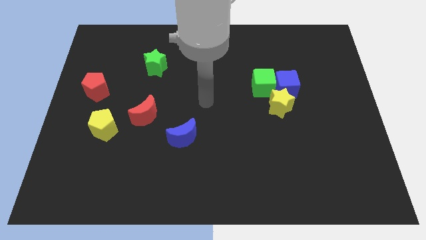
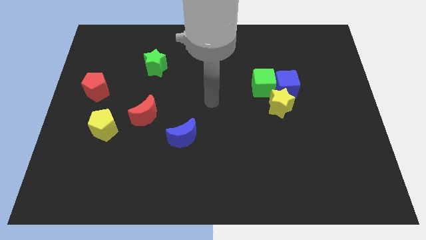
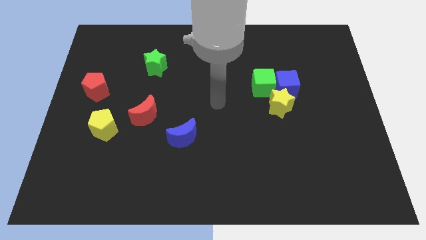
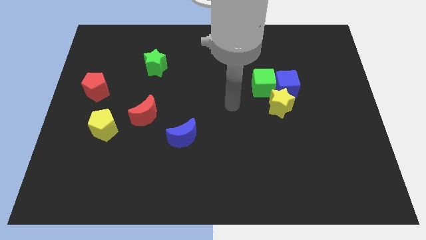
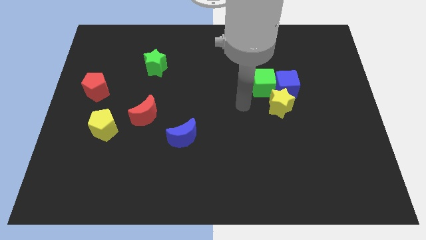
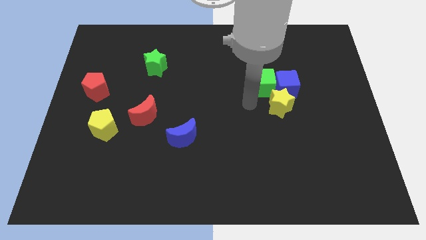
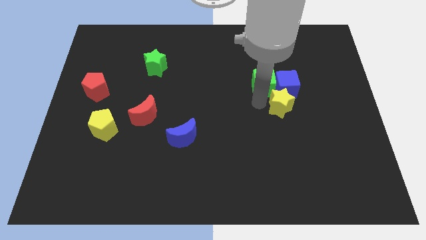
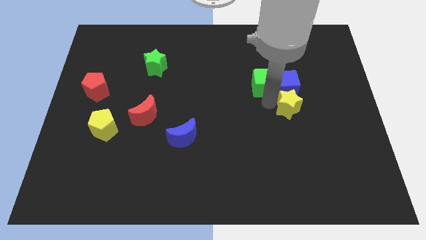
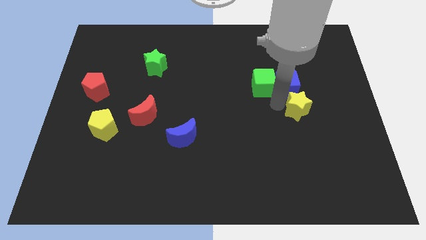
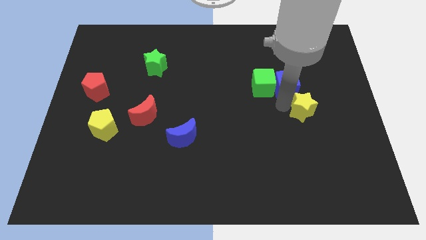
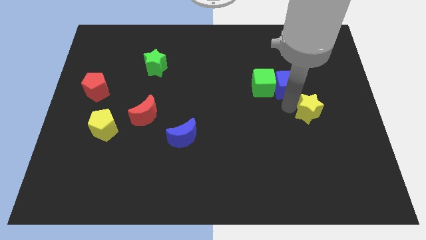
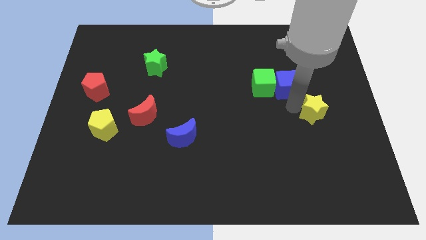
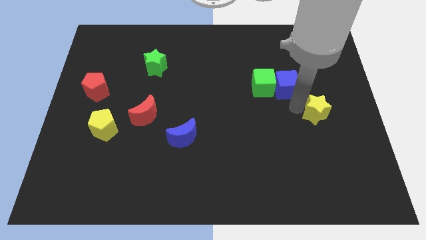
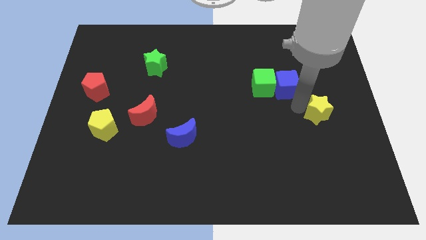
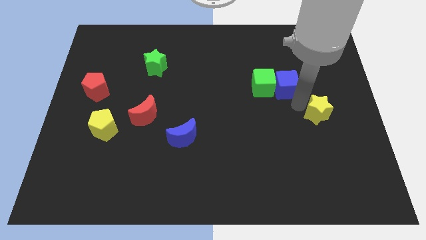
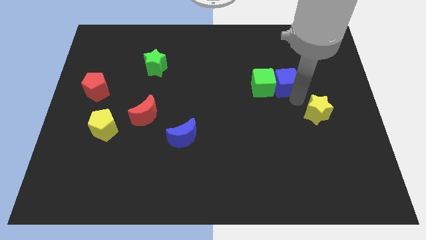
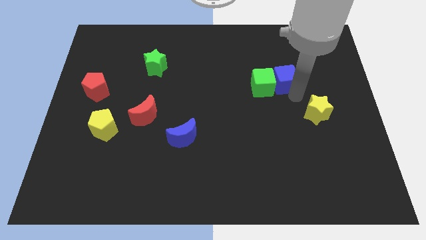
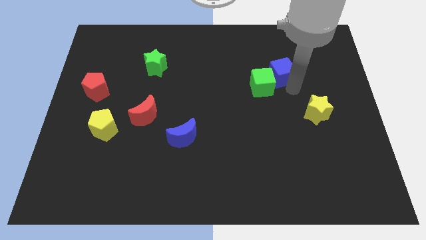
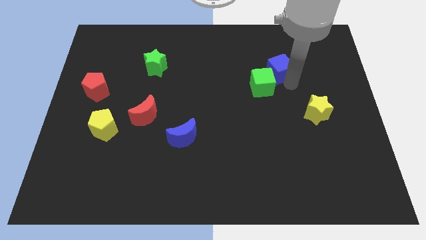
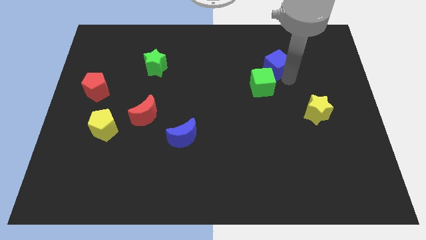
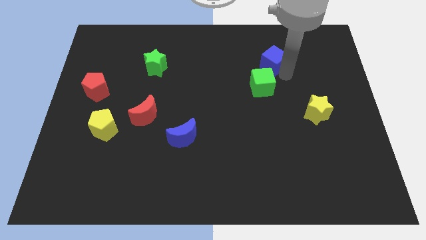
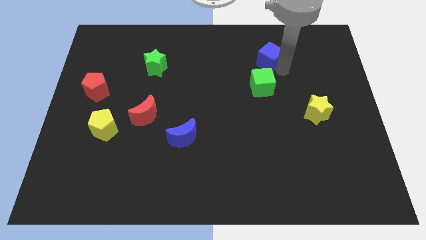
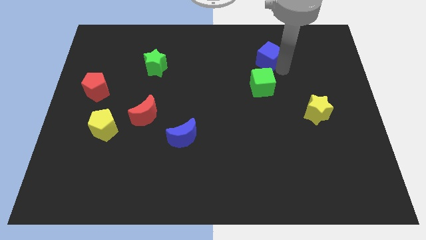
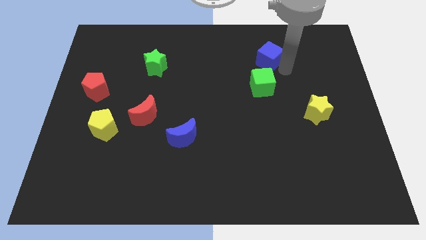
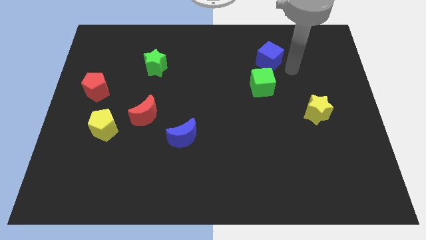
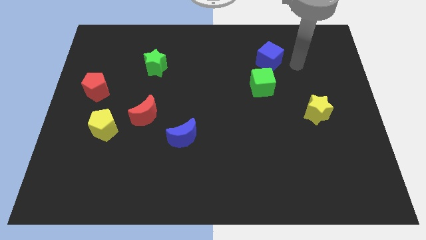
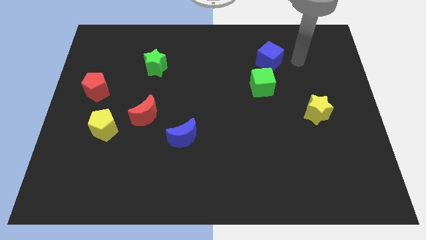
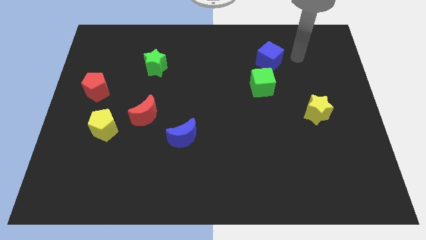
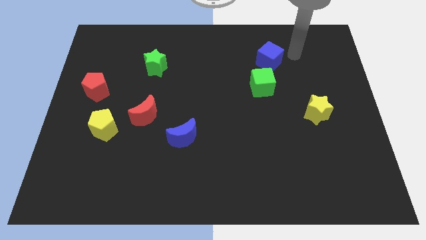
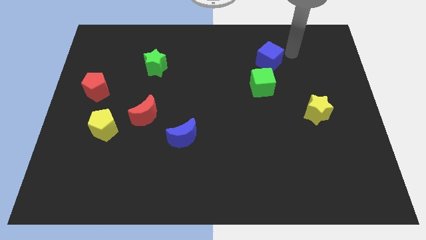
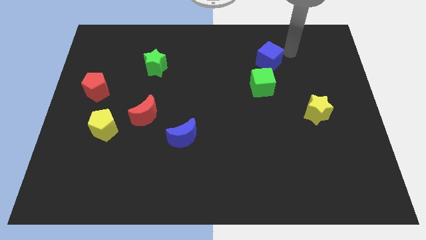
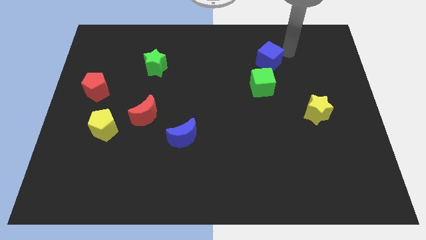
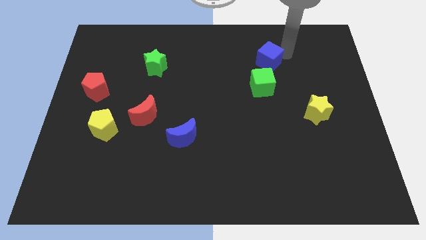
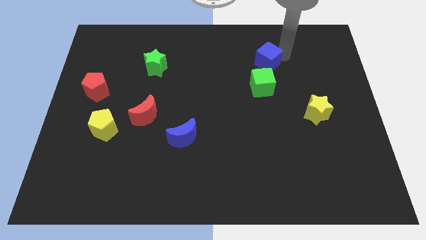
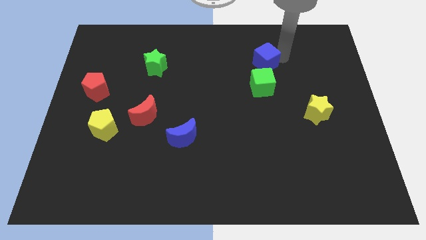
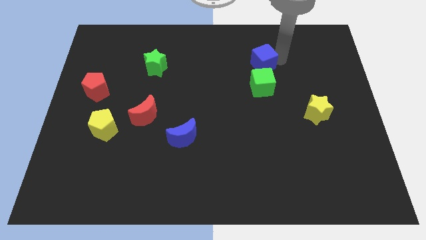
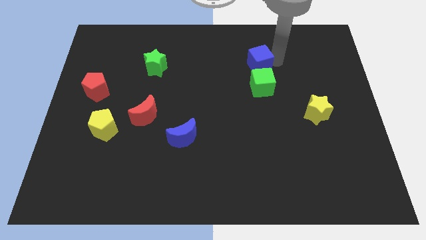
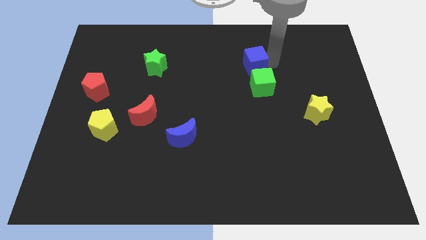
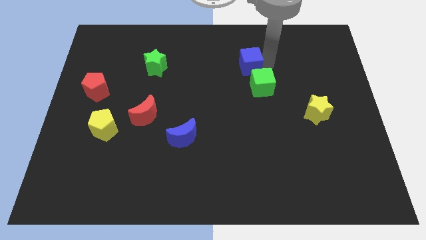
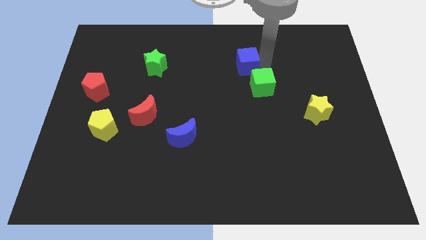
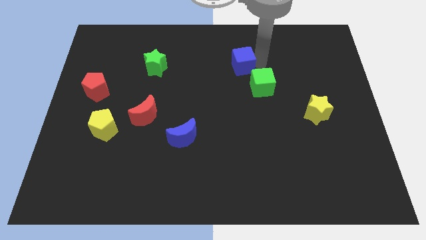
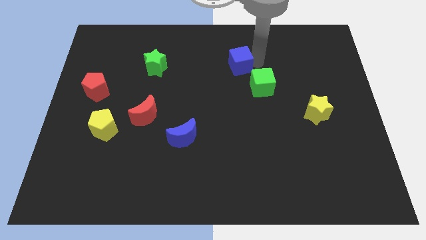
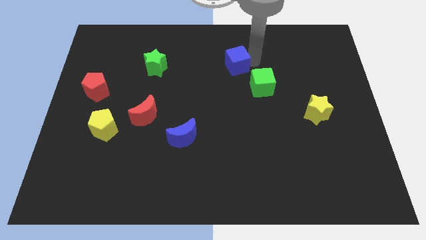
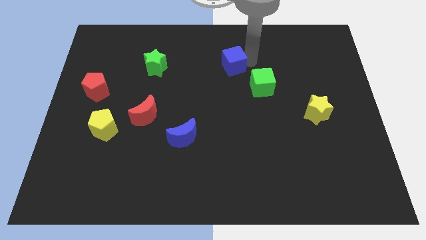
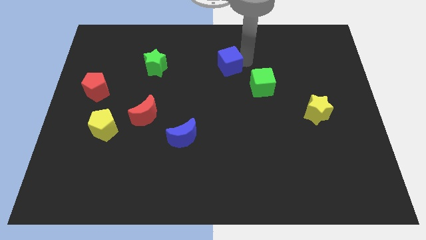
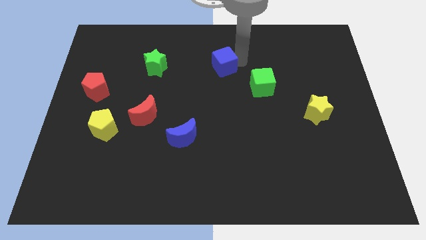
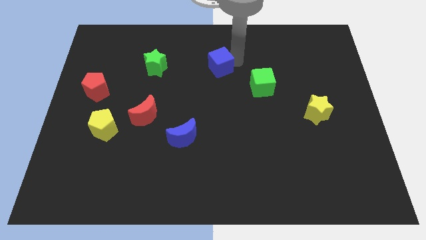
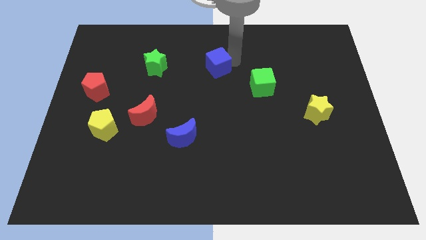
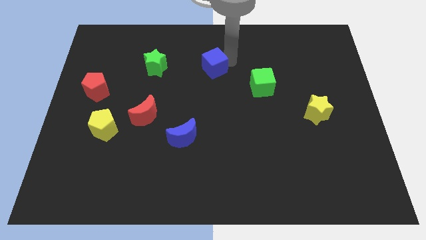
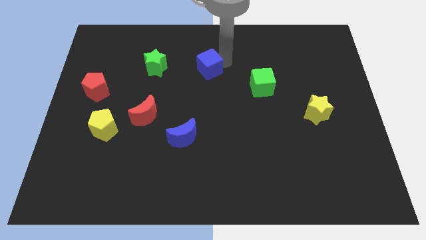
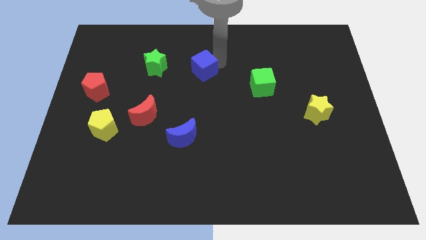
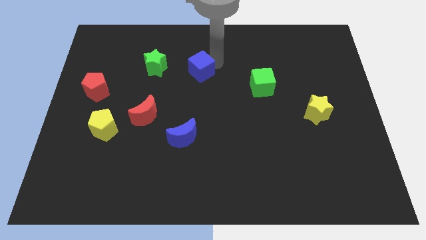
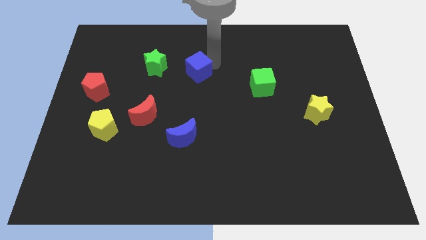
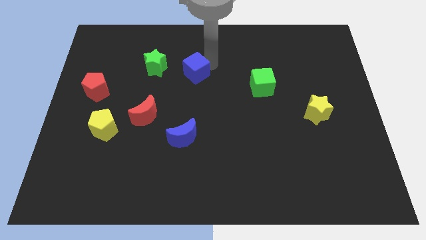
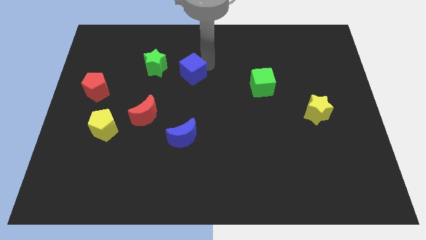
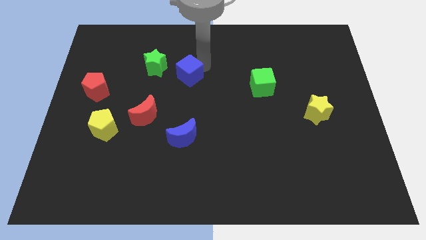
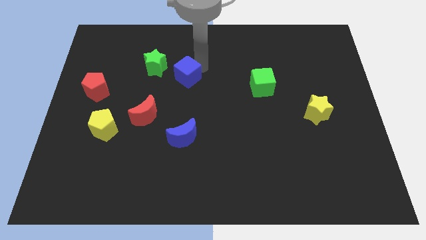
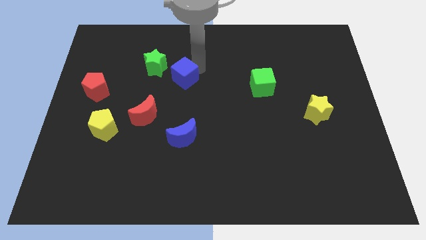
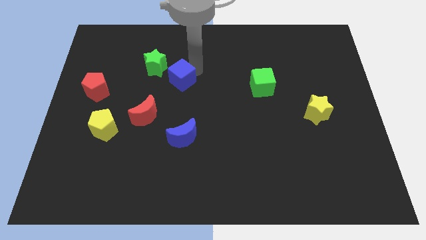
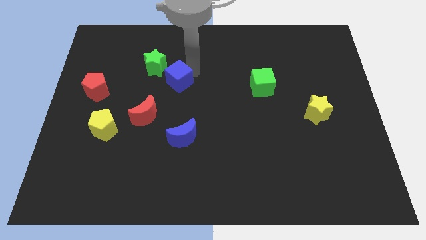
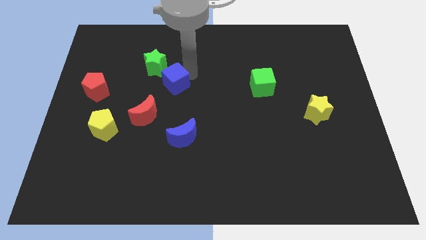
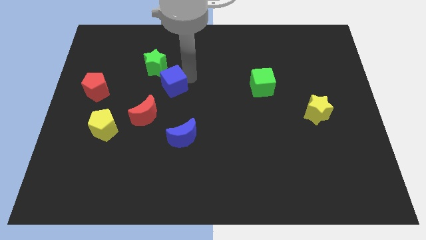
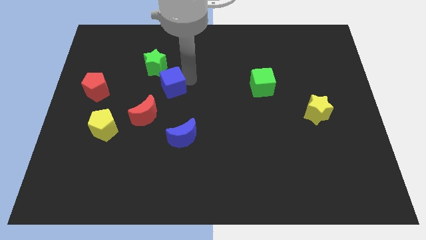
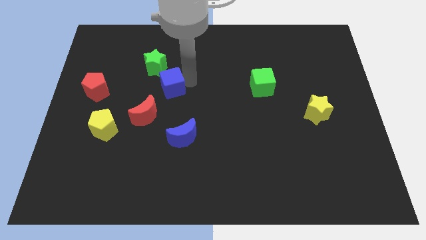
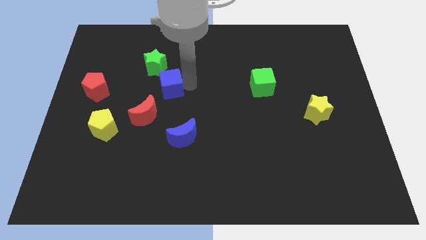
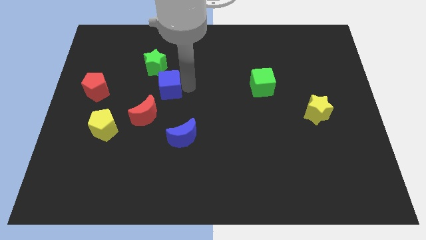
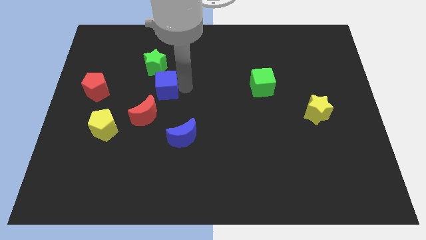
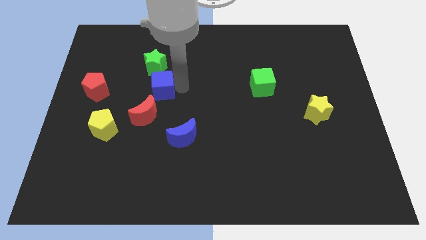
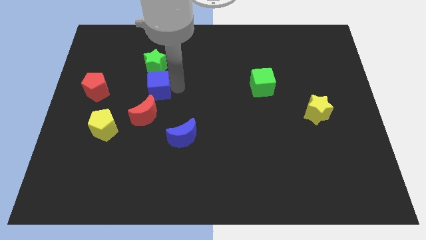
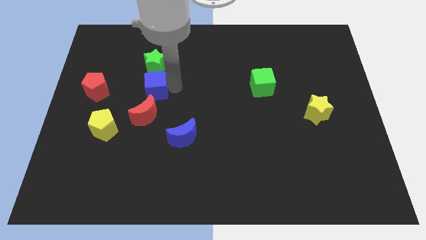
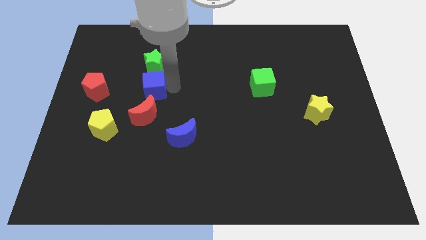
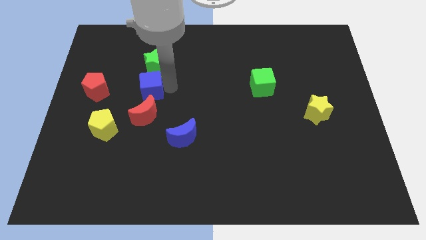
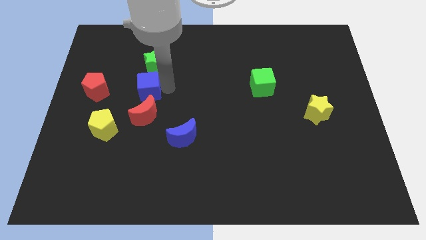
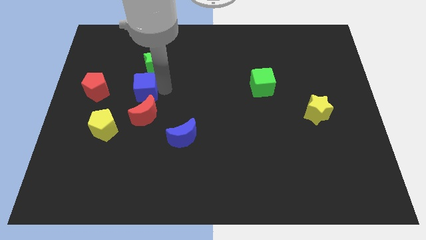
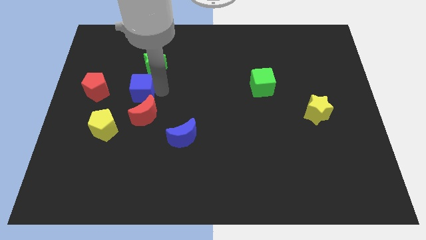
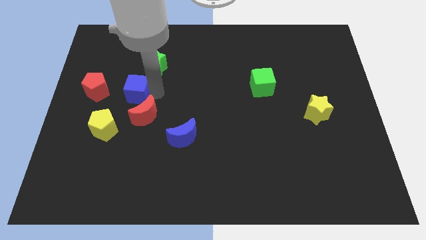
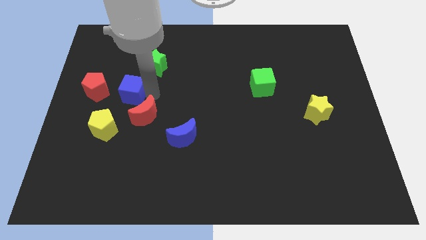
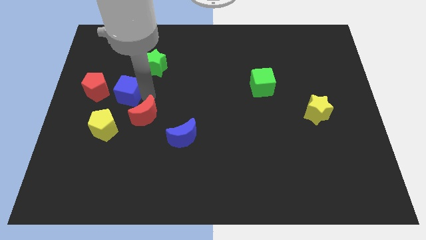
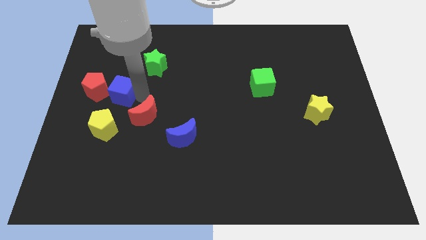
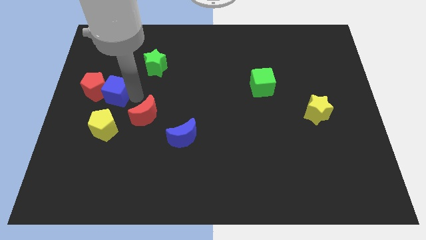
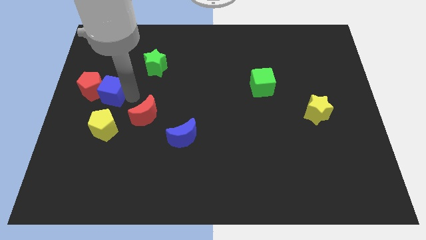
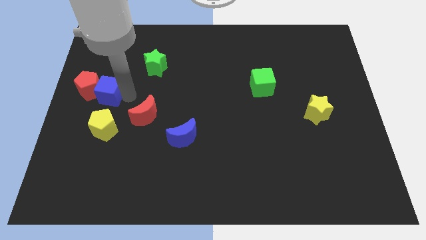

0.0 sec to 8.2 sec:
put the blue cube next to the red pentagon

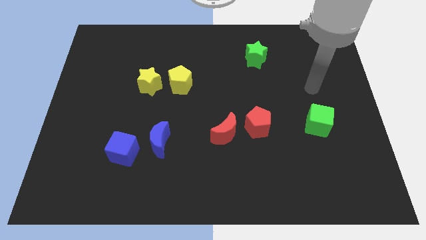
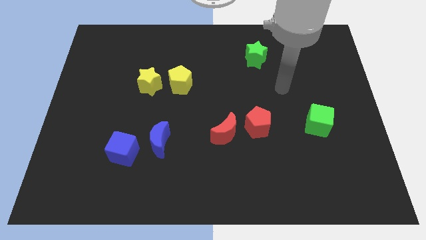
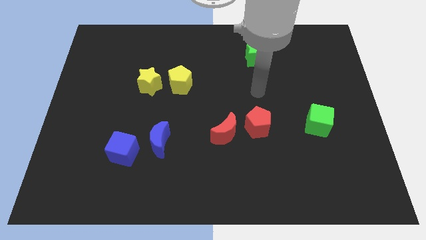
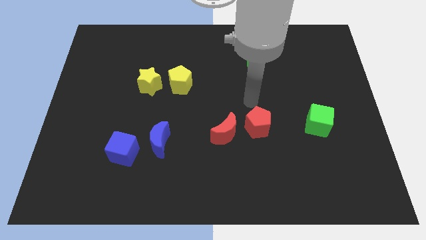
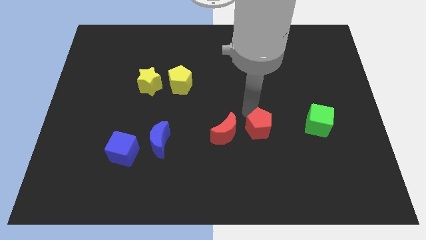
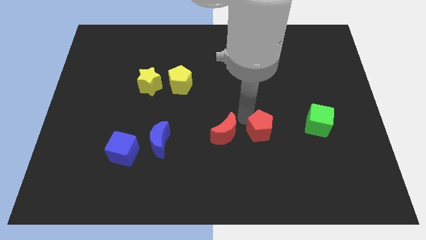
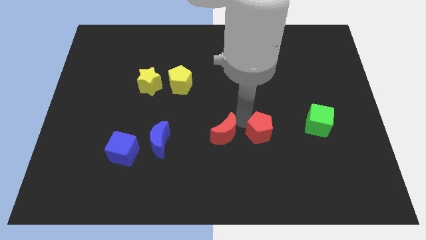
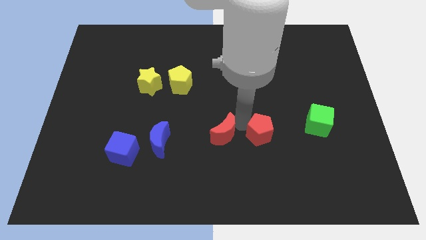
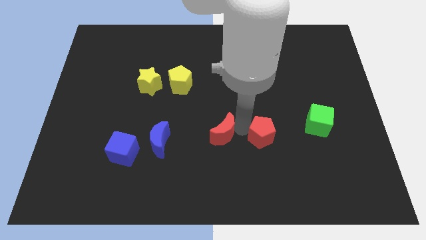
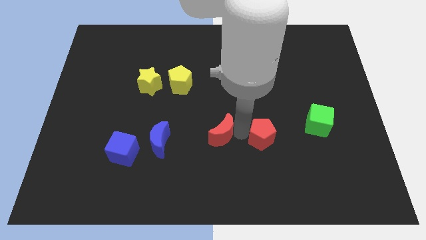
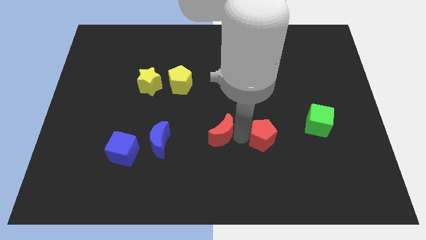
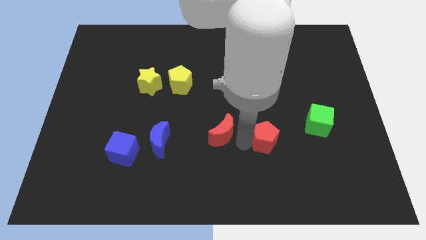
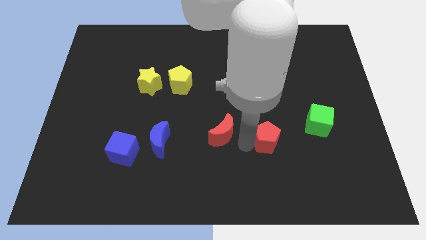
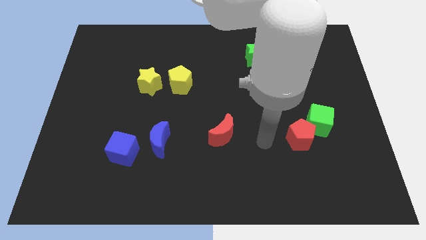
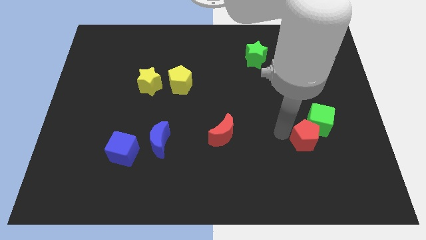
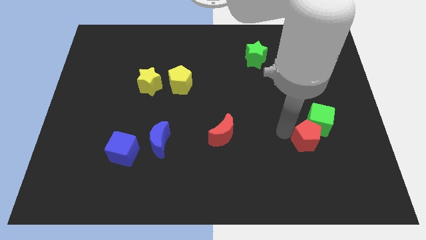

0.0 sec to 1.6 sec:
put the red pentagon to the green cube
